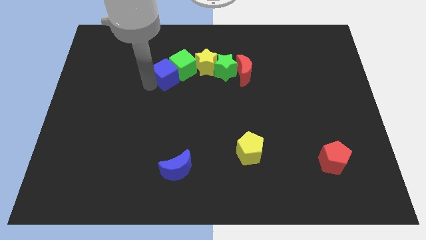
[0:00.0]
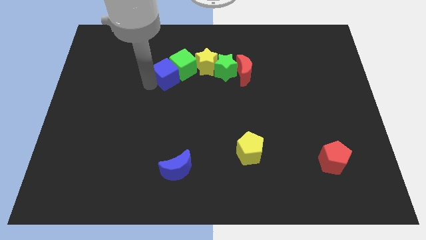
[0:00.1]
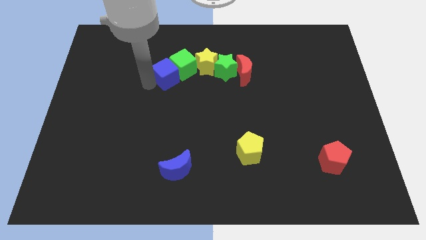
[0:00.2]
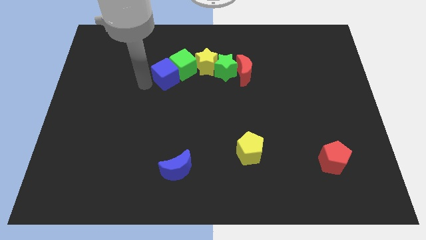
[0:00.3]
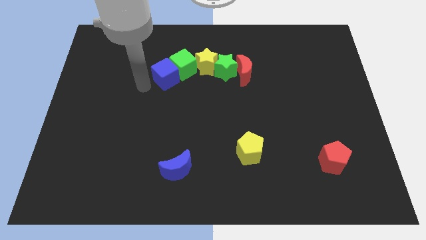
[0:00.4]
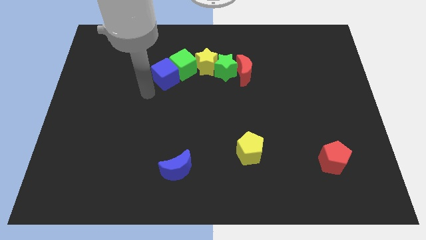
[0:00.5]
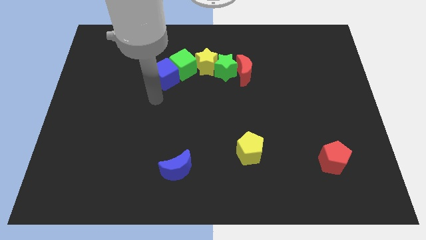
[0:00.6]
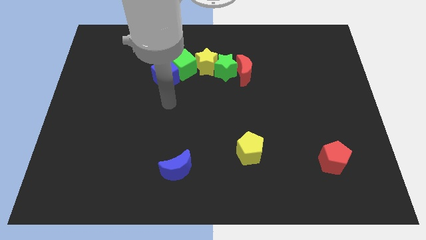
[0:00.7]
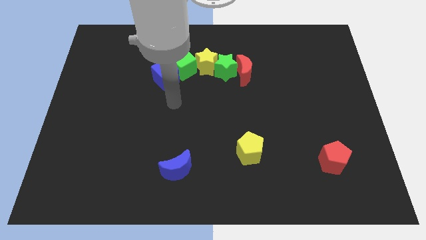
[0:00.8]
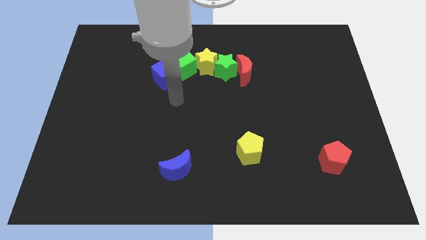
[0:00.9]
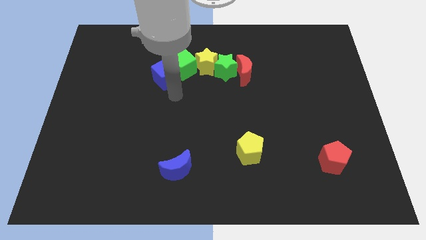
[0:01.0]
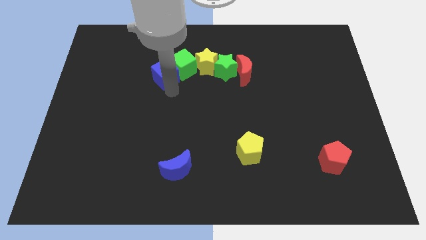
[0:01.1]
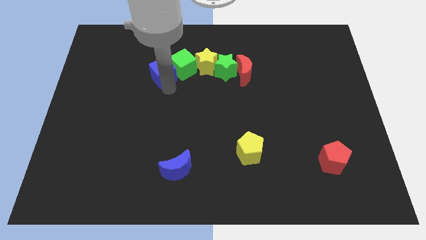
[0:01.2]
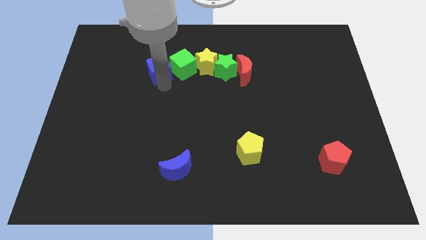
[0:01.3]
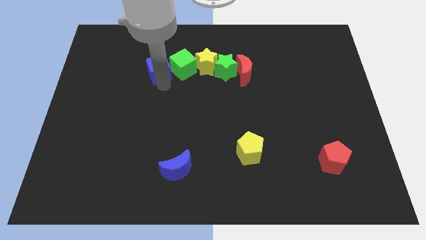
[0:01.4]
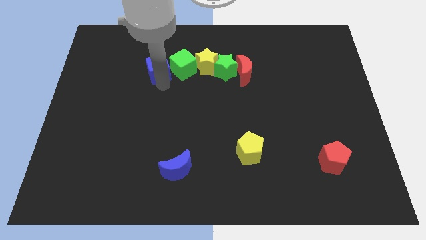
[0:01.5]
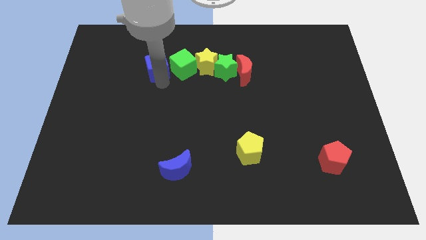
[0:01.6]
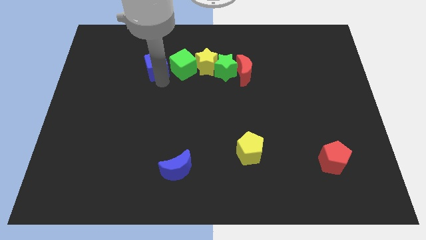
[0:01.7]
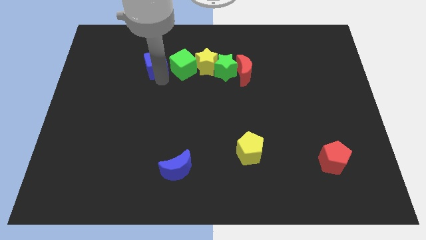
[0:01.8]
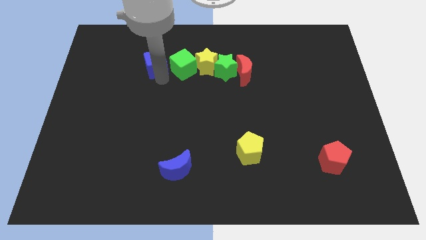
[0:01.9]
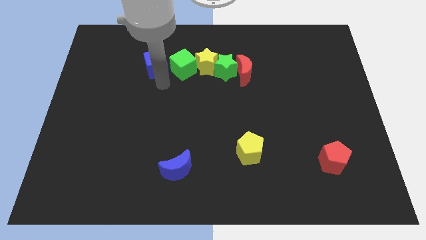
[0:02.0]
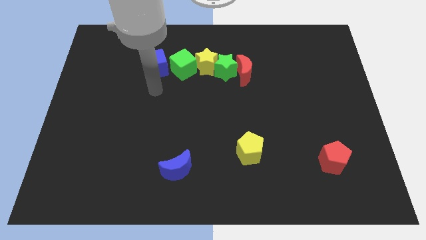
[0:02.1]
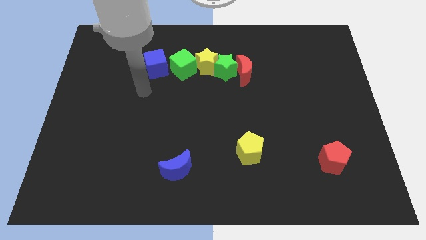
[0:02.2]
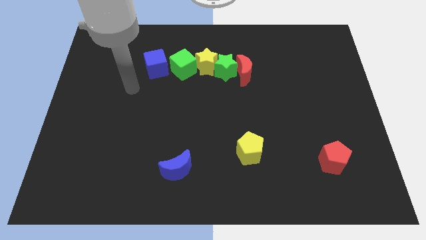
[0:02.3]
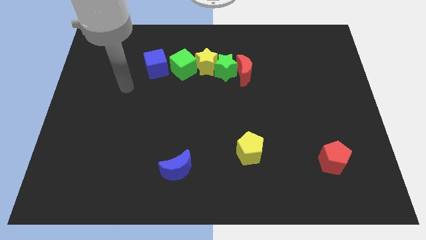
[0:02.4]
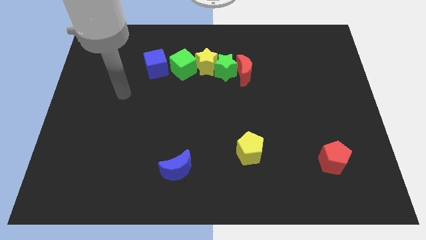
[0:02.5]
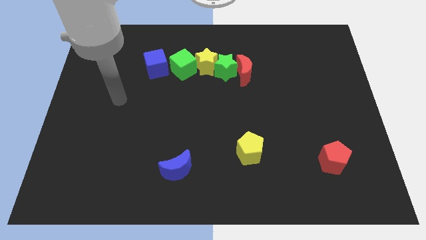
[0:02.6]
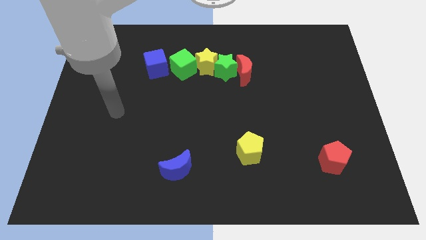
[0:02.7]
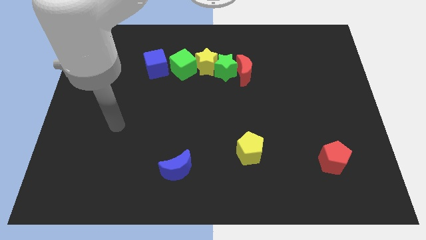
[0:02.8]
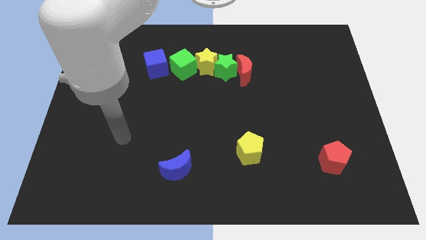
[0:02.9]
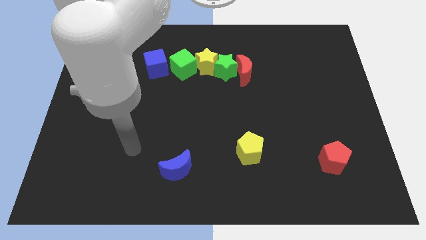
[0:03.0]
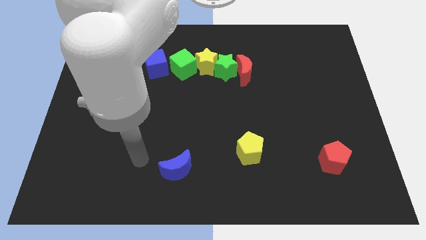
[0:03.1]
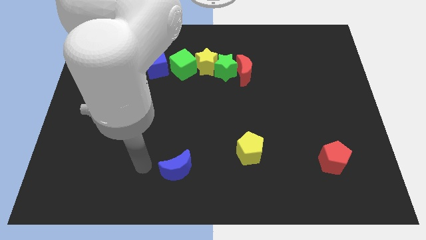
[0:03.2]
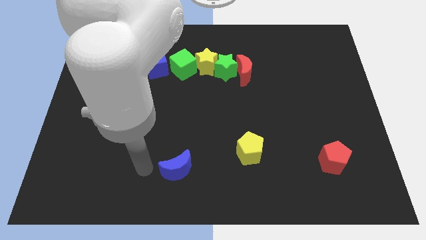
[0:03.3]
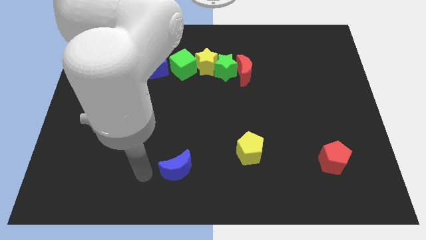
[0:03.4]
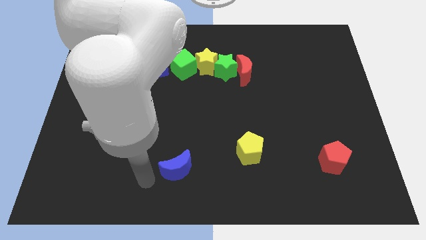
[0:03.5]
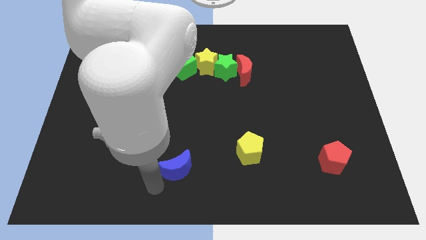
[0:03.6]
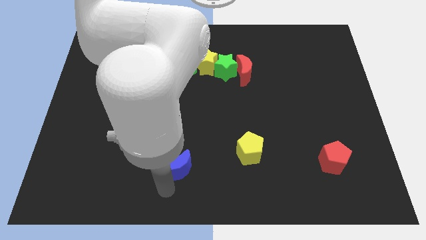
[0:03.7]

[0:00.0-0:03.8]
move your arm towards the blue crescent

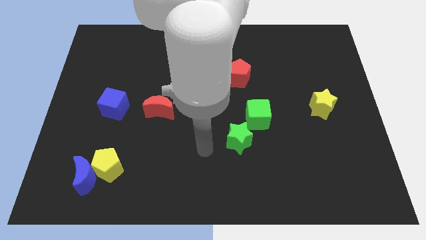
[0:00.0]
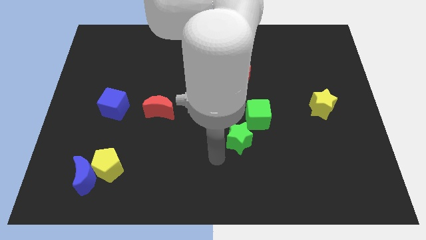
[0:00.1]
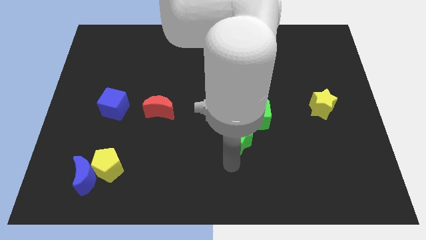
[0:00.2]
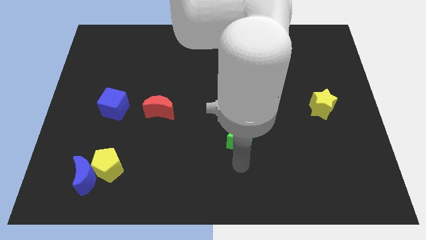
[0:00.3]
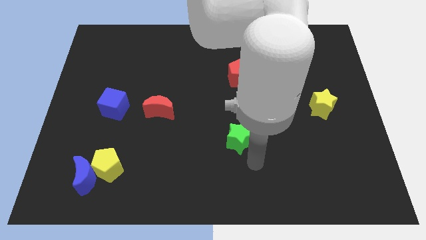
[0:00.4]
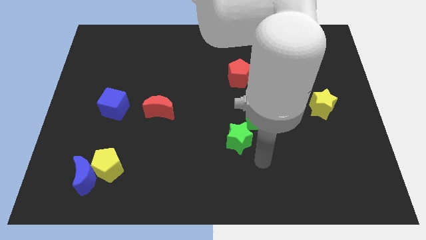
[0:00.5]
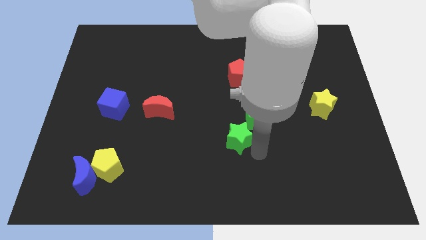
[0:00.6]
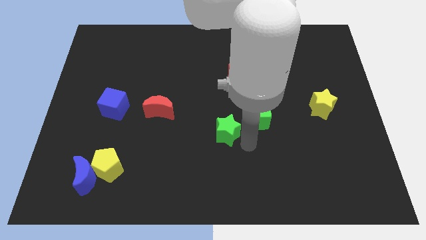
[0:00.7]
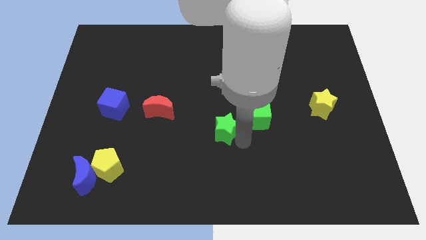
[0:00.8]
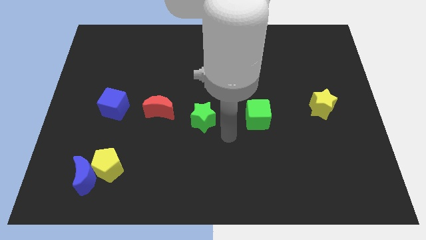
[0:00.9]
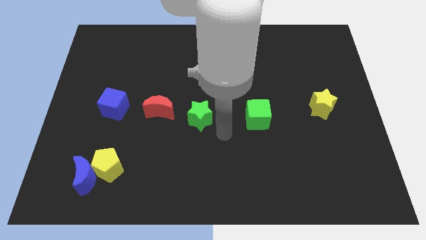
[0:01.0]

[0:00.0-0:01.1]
push green star towards center

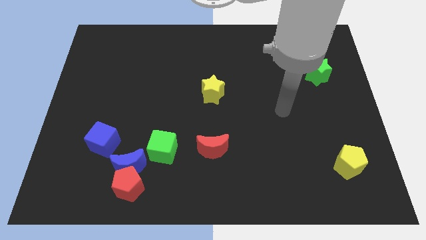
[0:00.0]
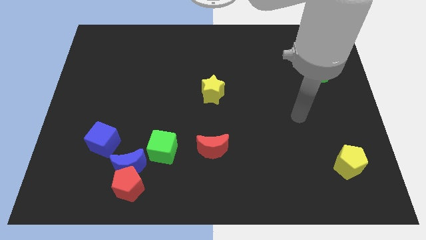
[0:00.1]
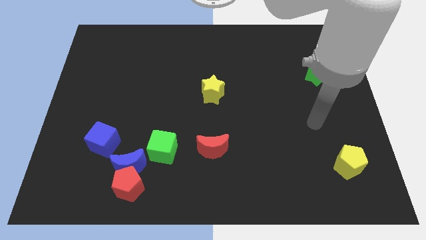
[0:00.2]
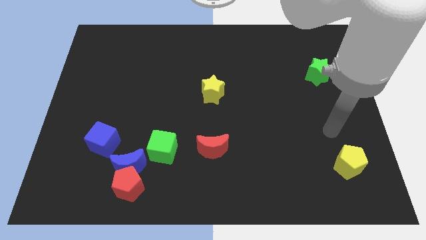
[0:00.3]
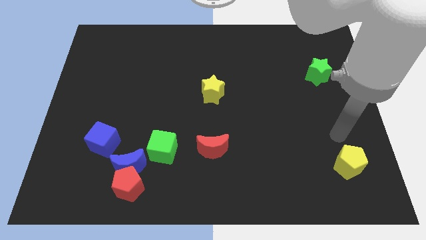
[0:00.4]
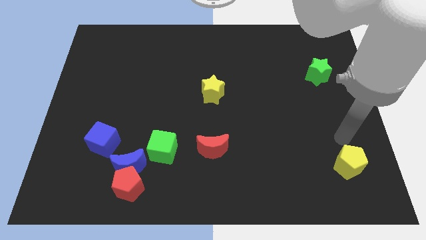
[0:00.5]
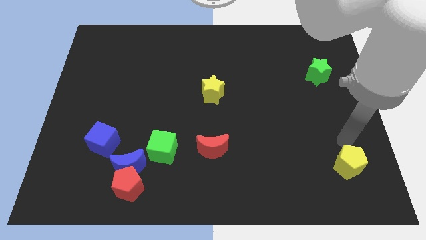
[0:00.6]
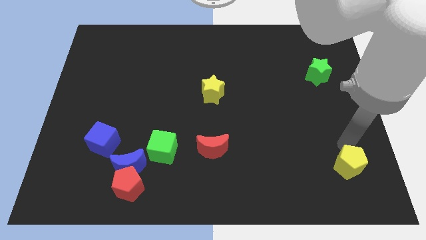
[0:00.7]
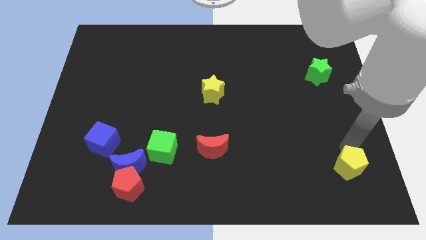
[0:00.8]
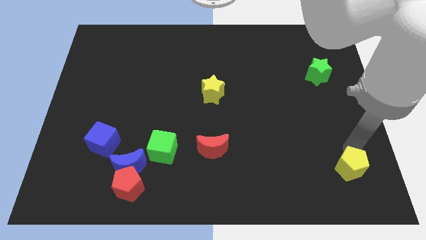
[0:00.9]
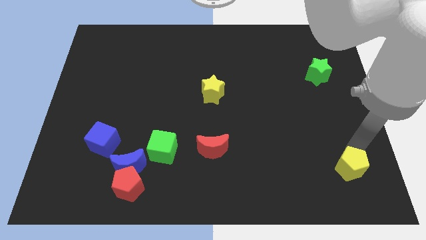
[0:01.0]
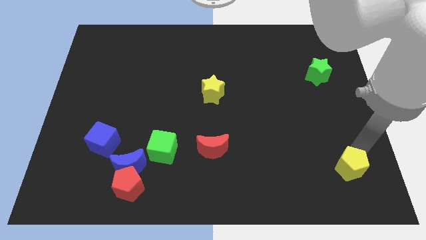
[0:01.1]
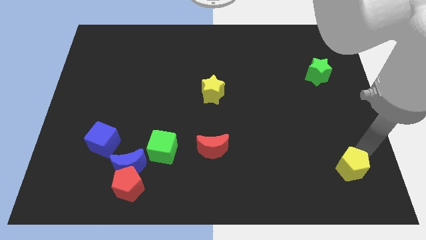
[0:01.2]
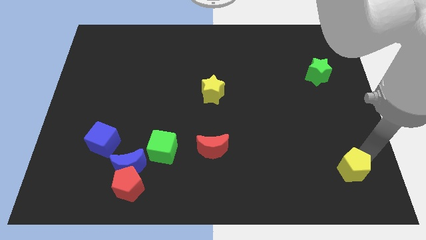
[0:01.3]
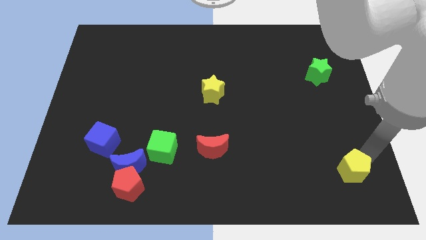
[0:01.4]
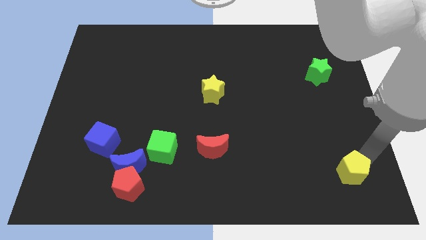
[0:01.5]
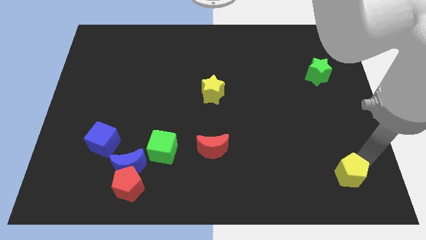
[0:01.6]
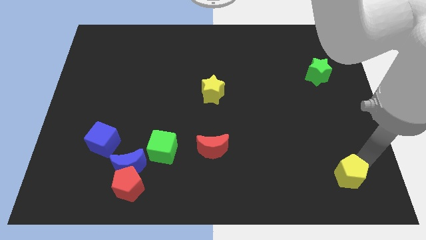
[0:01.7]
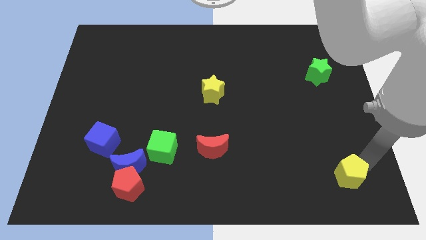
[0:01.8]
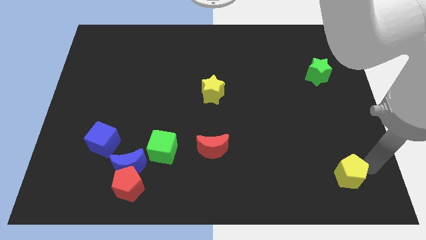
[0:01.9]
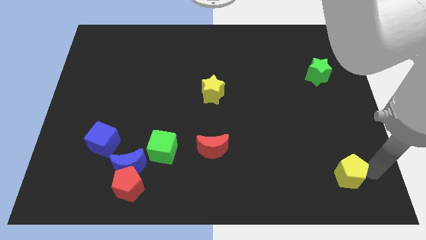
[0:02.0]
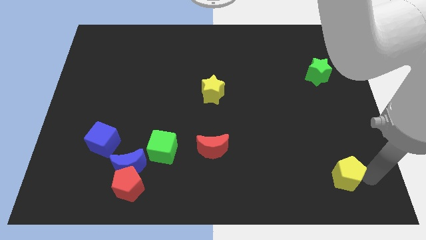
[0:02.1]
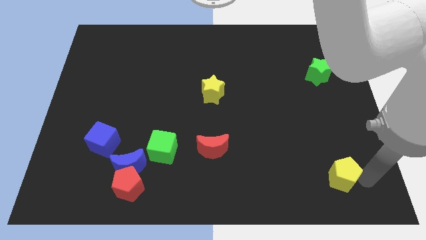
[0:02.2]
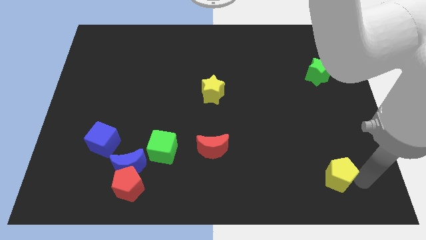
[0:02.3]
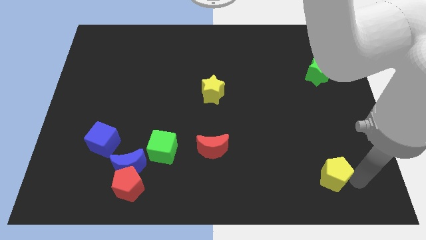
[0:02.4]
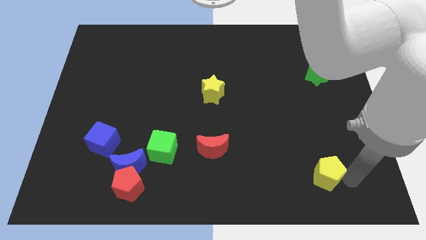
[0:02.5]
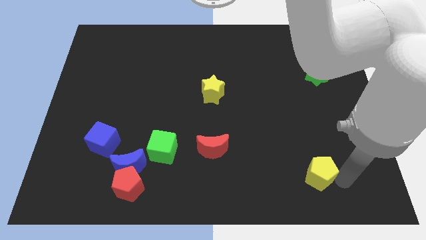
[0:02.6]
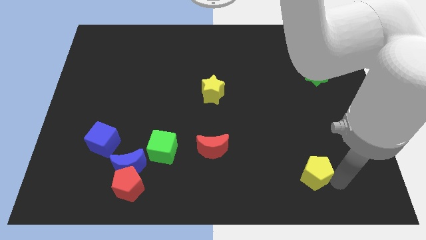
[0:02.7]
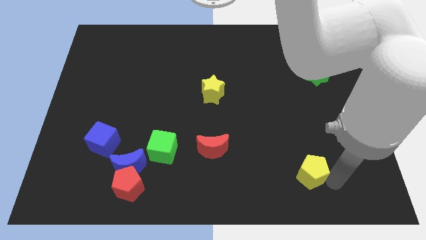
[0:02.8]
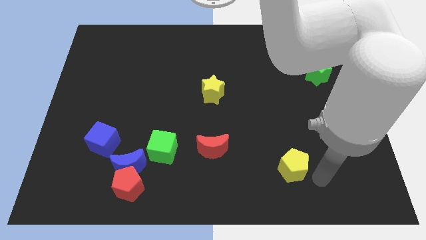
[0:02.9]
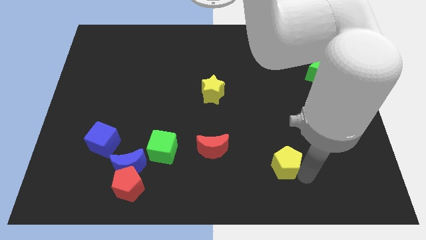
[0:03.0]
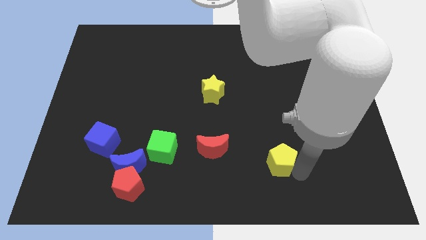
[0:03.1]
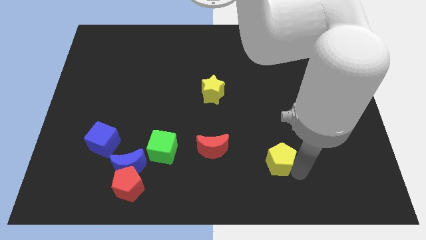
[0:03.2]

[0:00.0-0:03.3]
move the yellow pentagon towards the red crescent

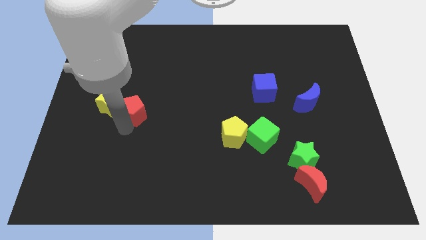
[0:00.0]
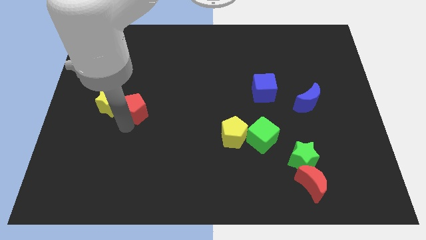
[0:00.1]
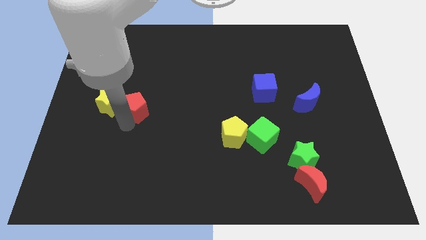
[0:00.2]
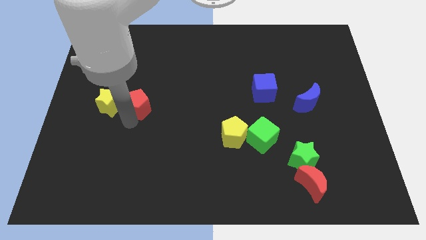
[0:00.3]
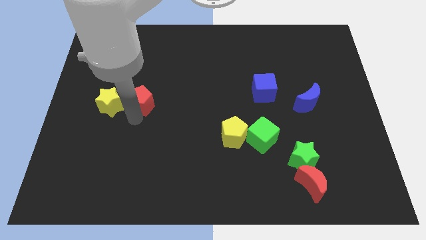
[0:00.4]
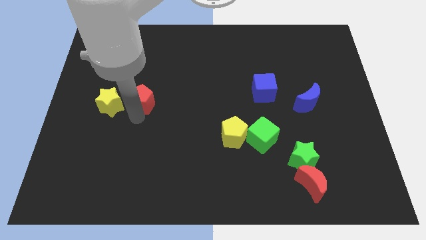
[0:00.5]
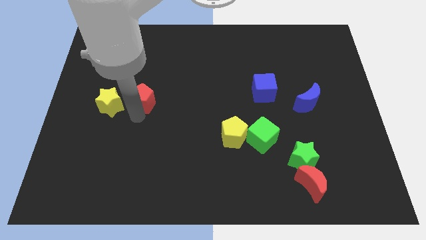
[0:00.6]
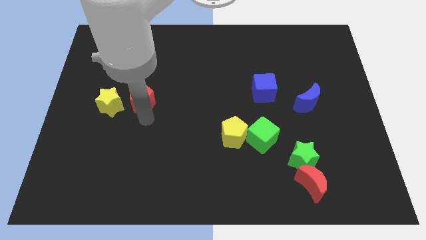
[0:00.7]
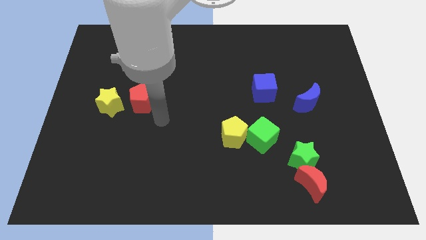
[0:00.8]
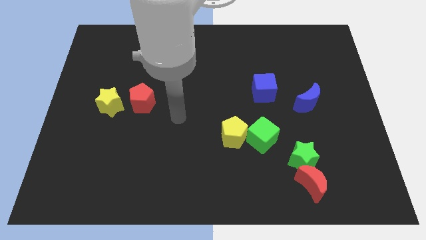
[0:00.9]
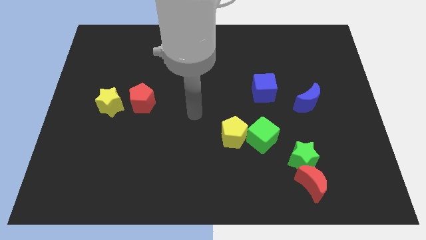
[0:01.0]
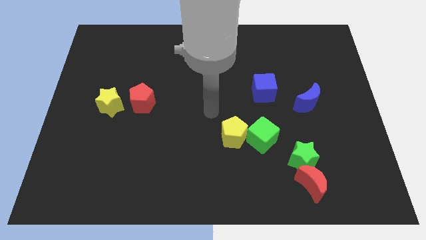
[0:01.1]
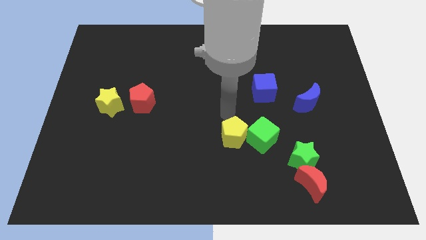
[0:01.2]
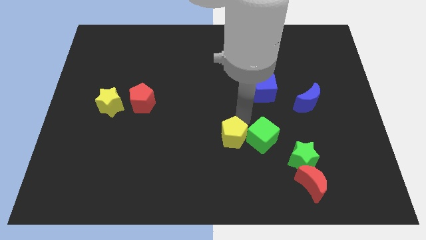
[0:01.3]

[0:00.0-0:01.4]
place red pentagon slightly upwards
